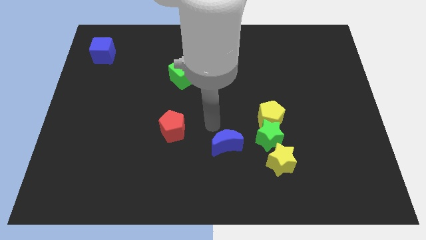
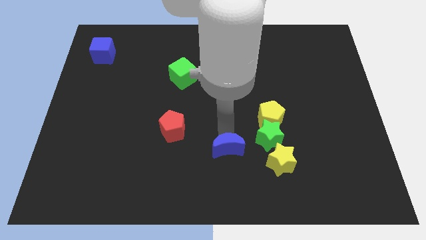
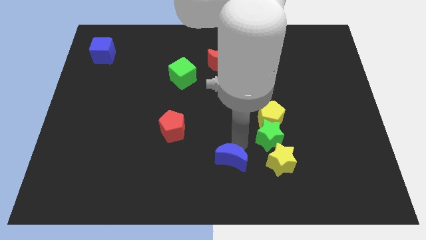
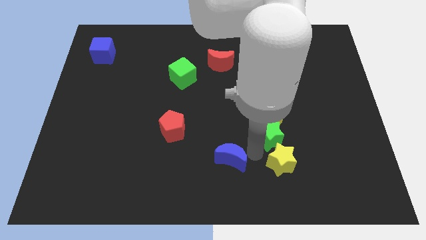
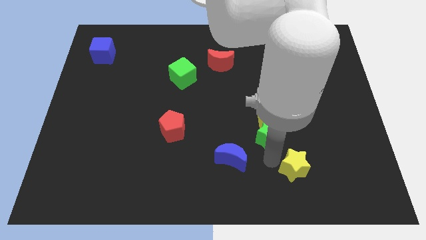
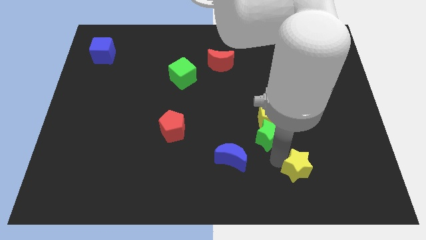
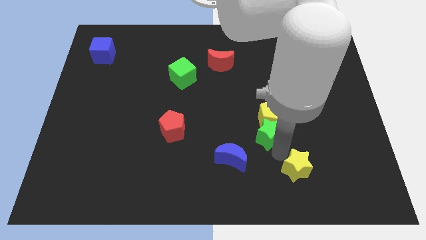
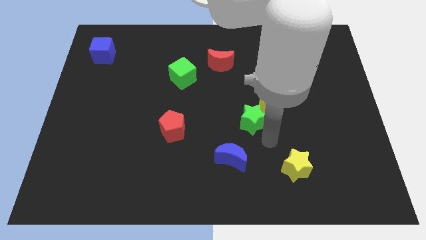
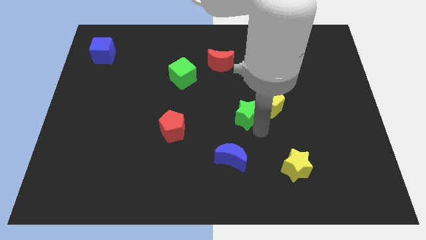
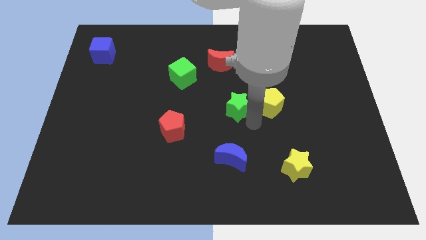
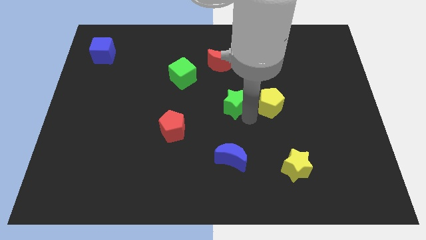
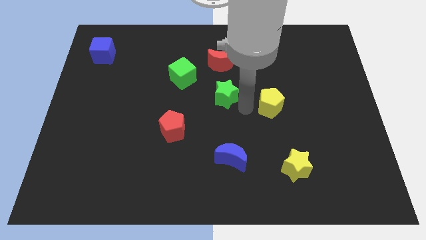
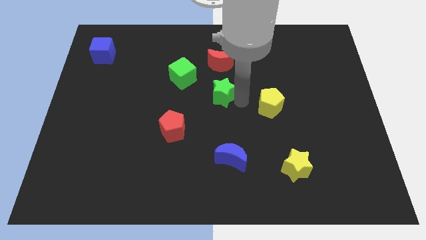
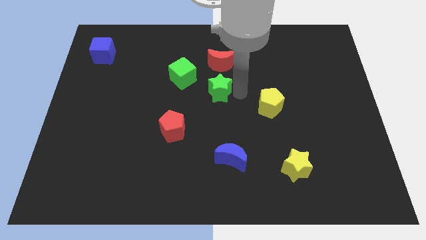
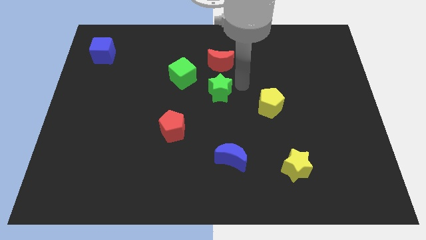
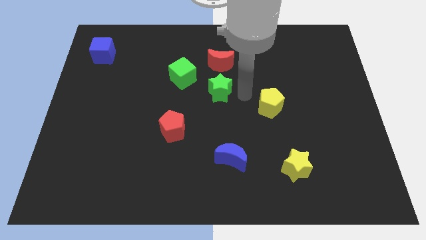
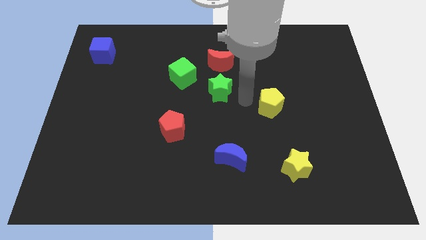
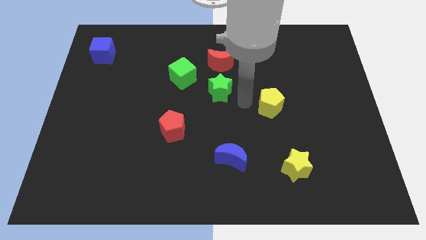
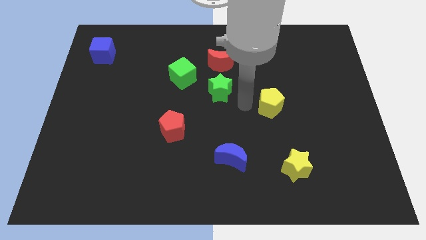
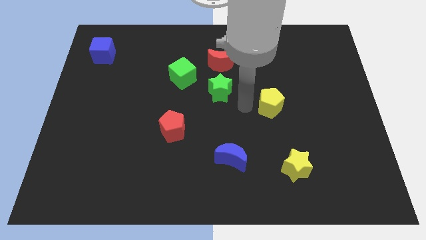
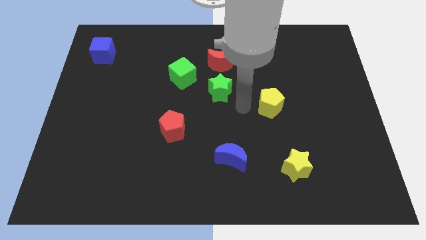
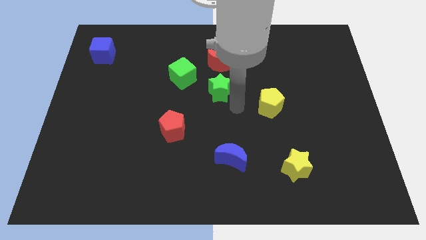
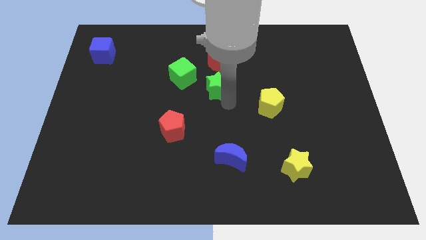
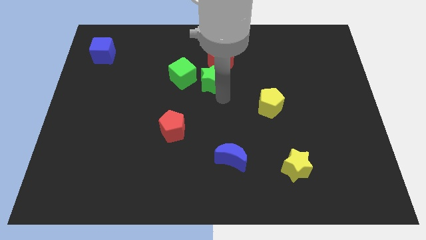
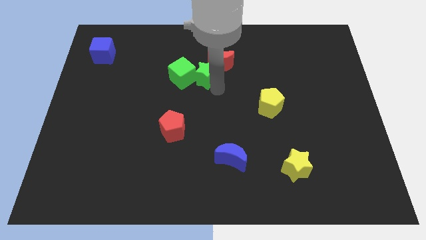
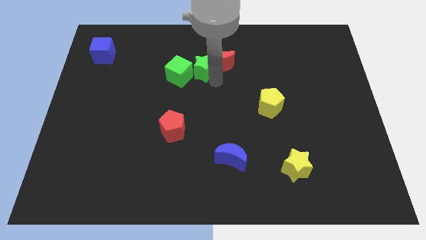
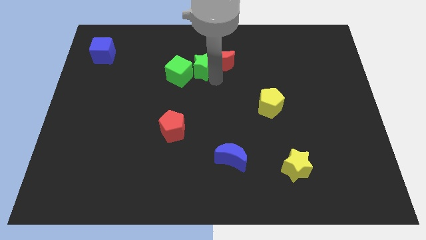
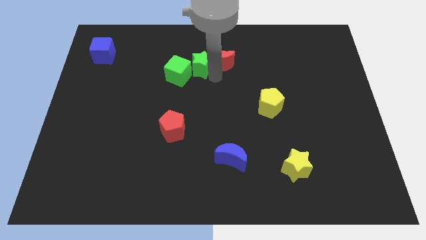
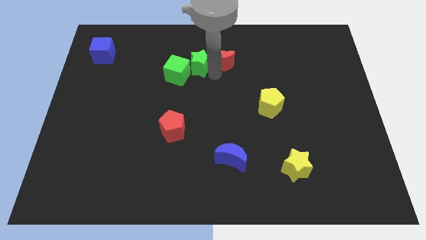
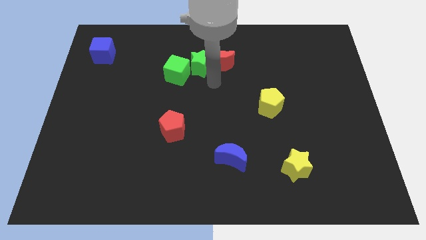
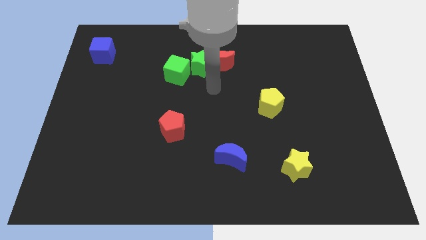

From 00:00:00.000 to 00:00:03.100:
take the green star close to the green cube

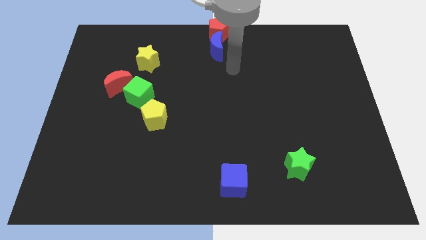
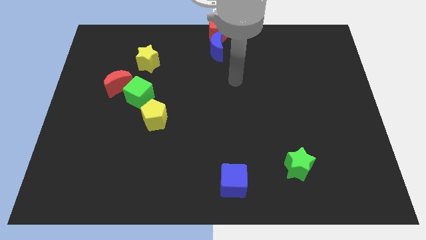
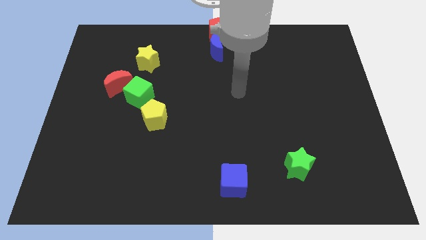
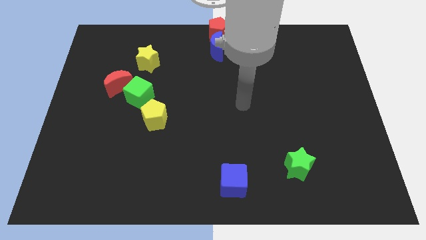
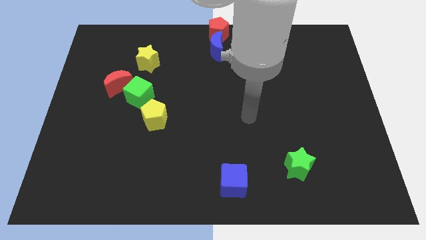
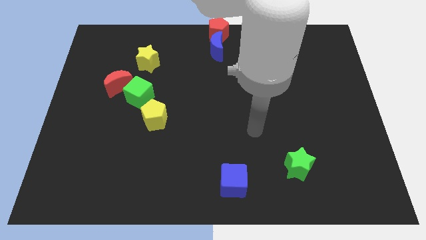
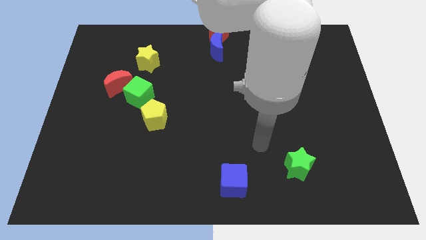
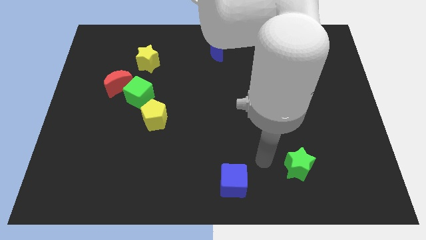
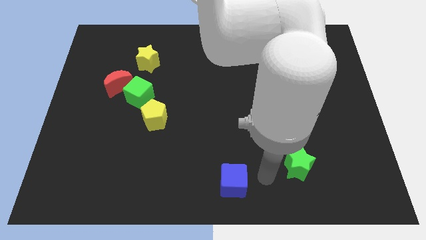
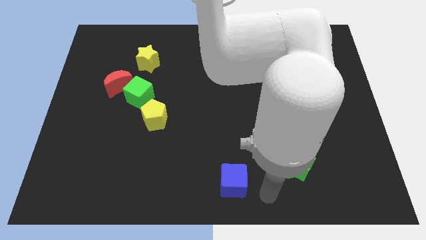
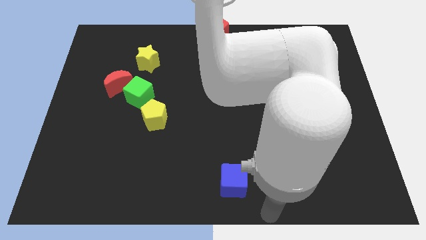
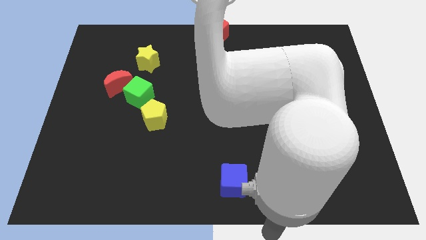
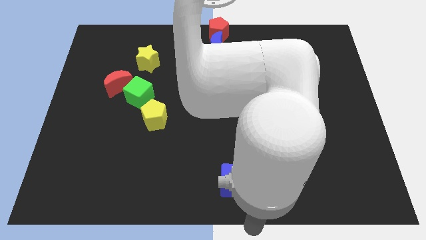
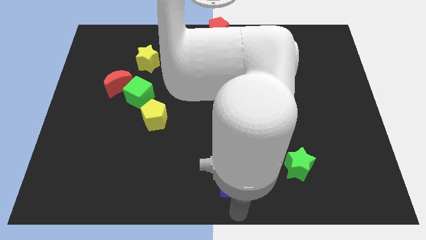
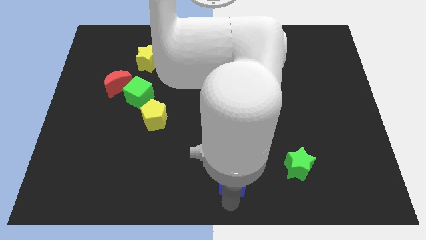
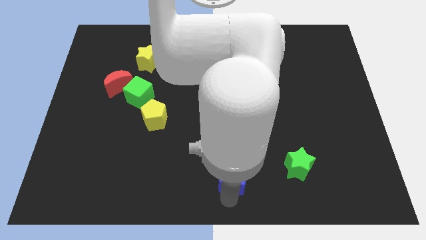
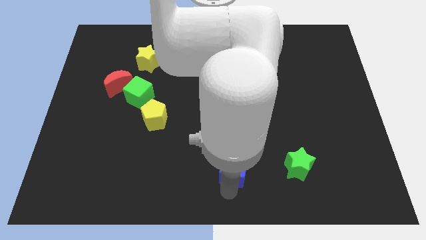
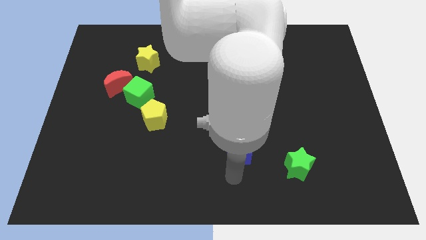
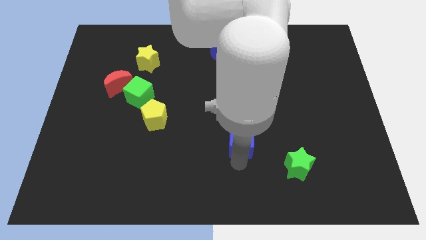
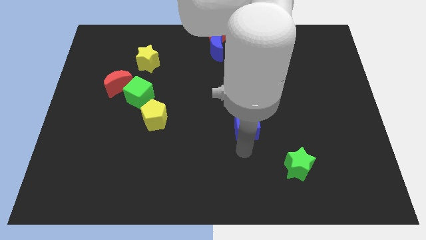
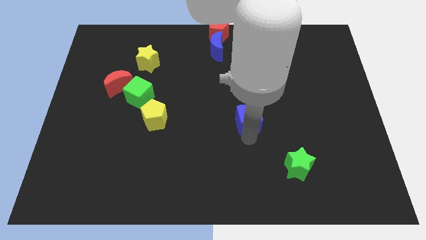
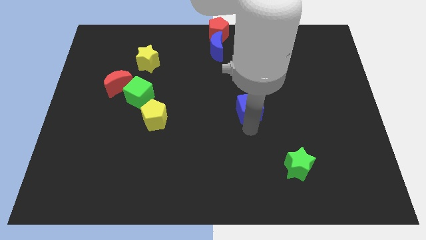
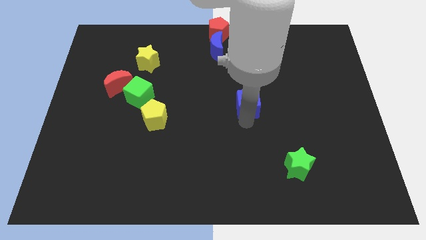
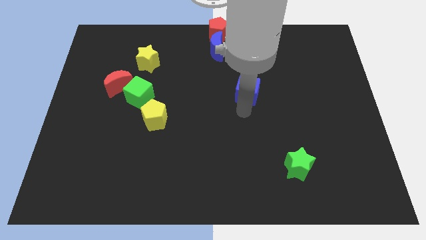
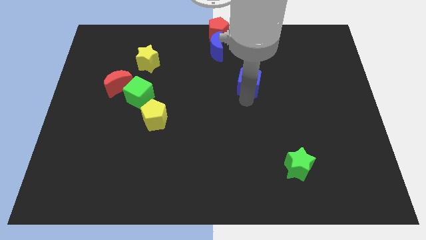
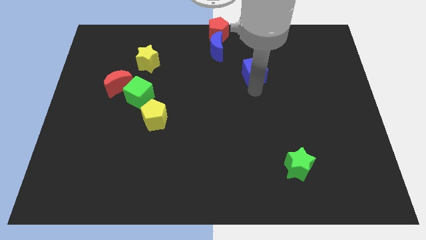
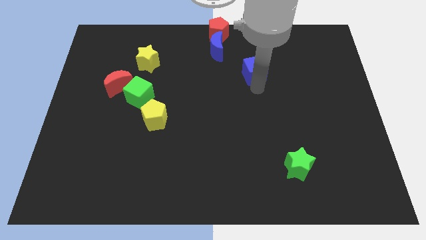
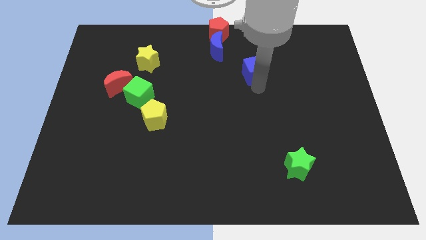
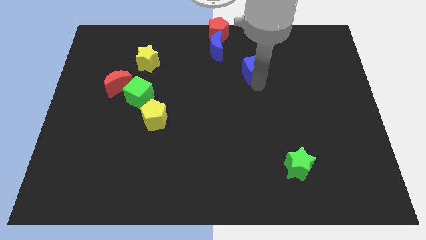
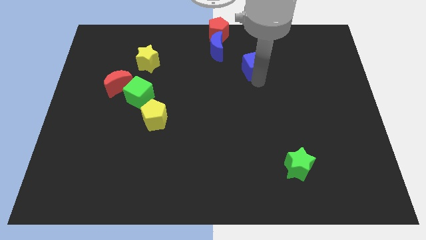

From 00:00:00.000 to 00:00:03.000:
push the blue cube to the bottom right of the blue crescent

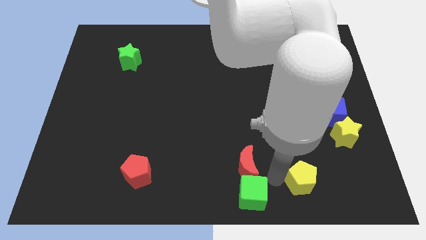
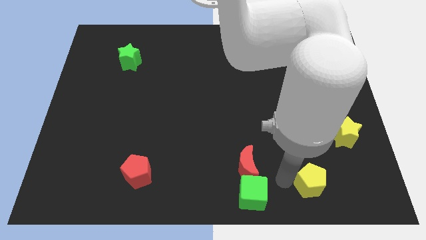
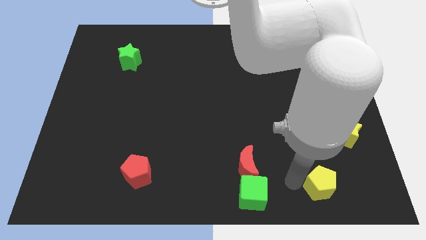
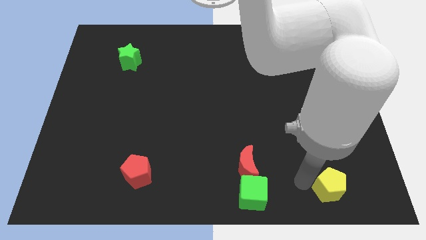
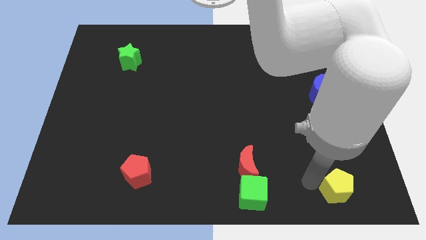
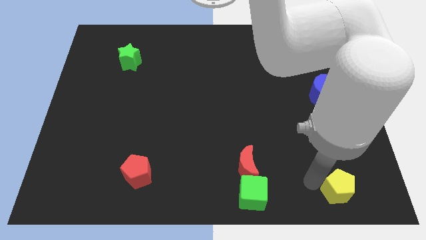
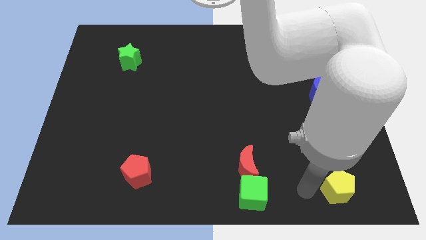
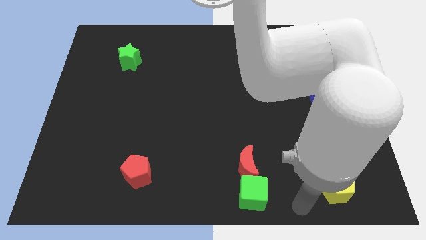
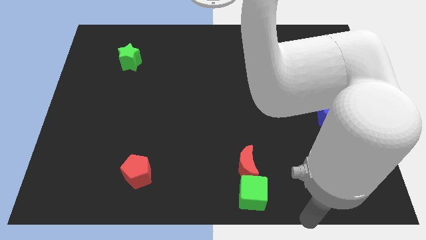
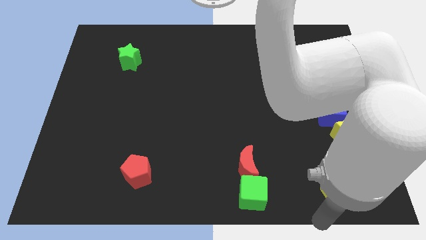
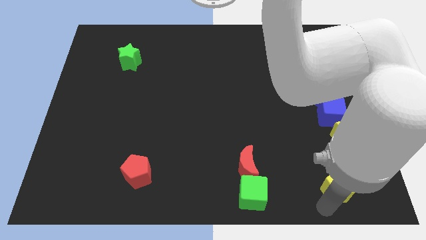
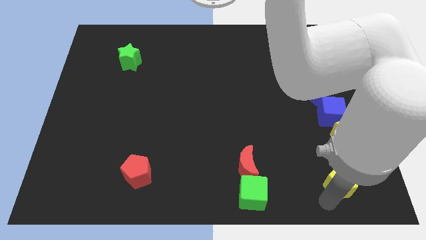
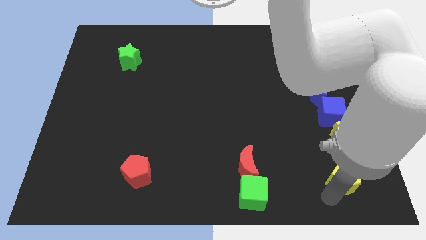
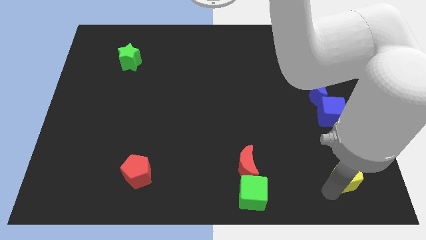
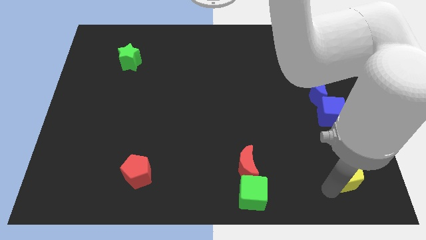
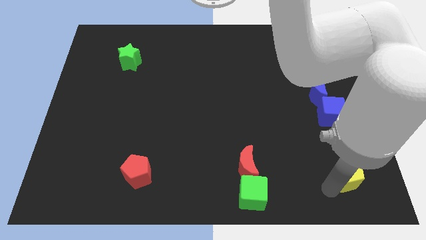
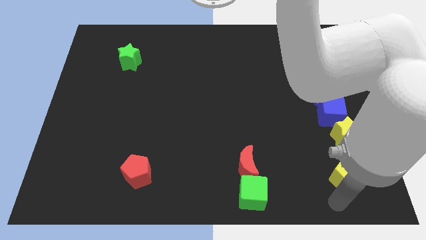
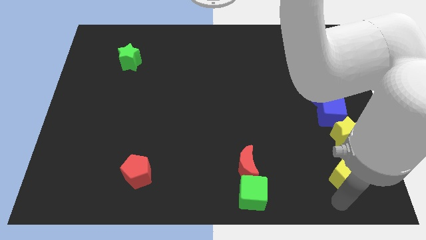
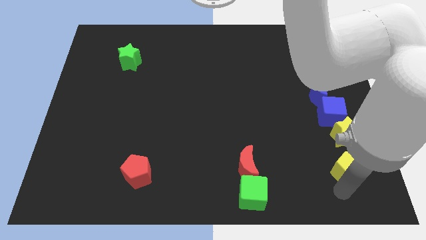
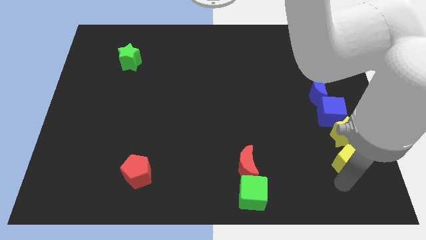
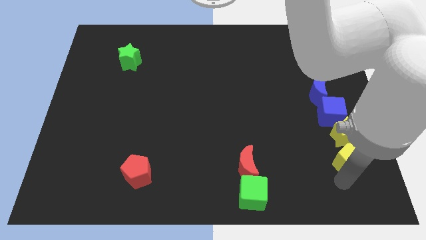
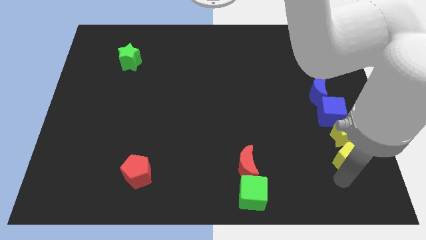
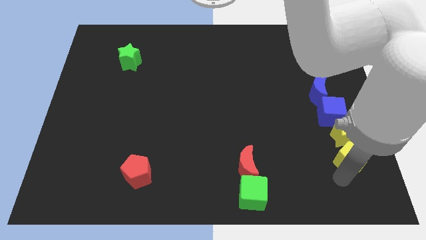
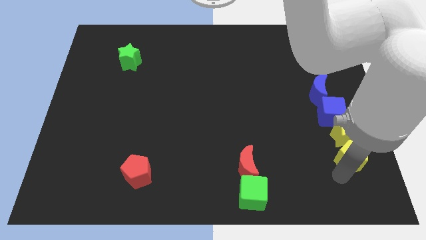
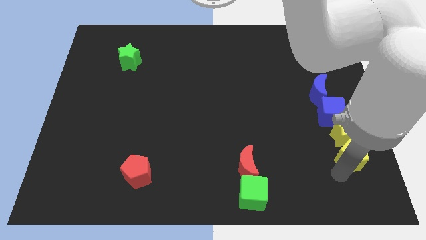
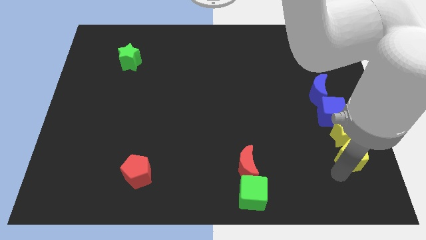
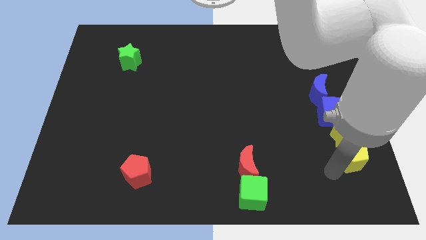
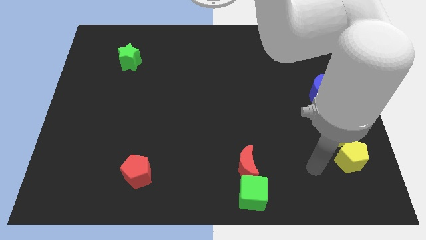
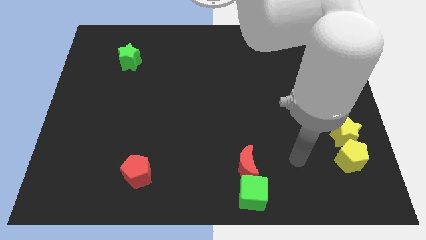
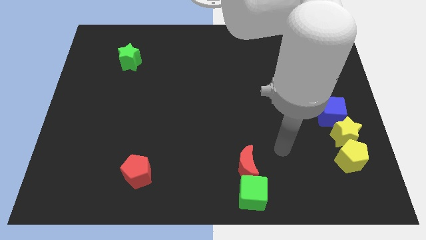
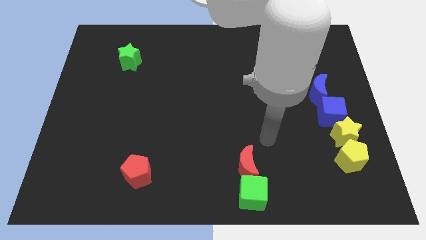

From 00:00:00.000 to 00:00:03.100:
place the yellow pentagon below the yellow star
